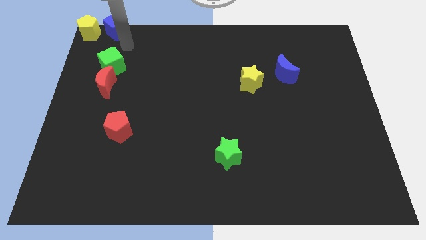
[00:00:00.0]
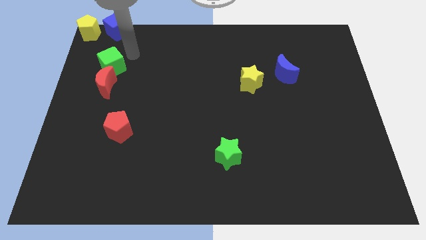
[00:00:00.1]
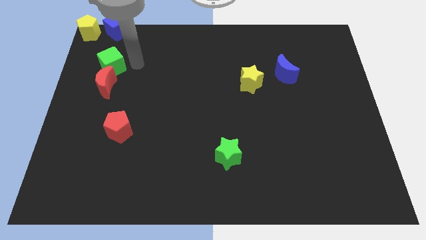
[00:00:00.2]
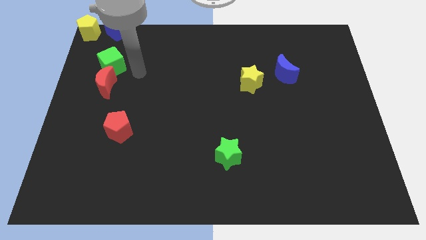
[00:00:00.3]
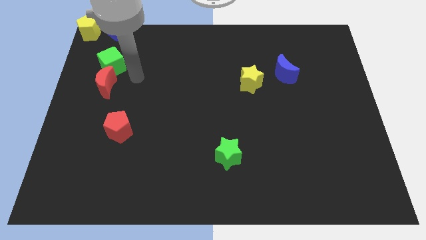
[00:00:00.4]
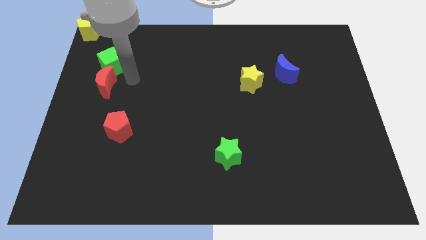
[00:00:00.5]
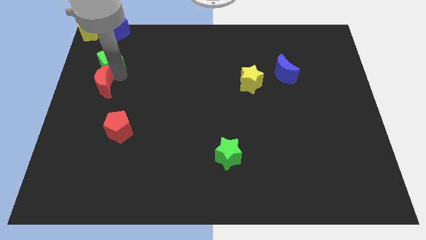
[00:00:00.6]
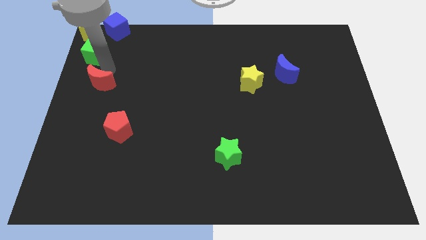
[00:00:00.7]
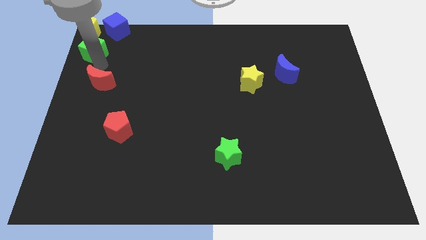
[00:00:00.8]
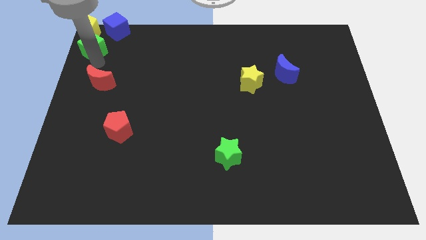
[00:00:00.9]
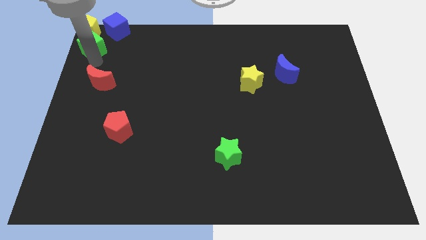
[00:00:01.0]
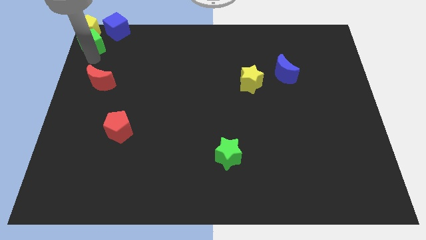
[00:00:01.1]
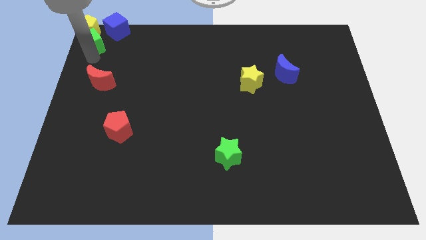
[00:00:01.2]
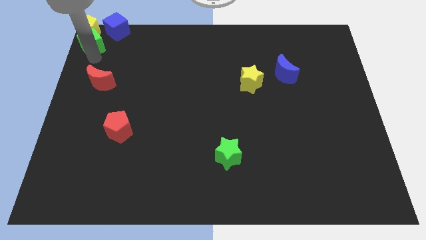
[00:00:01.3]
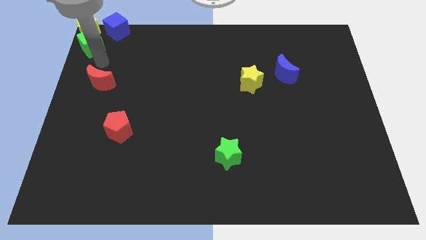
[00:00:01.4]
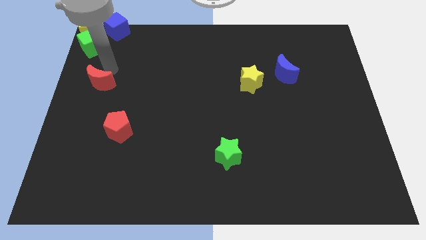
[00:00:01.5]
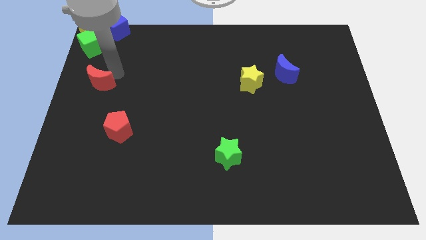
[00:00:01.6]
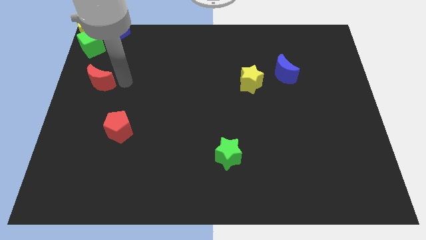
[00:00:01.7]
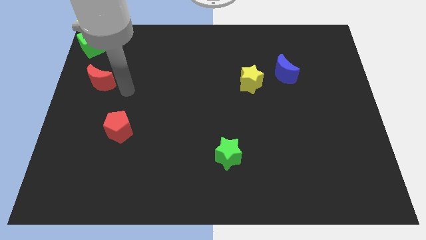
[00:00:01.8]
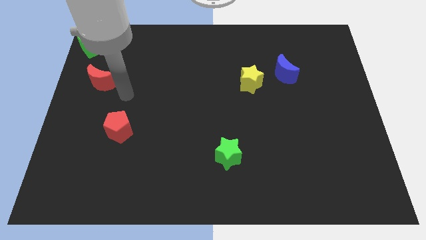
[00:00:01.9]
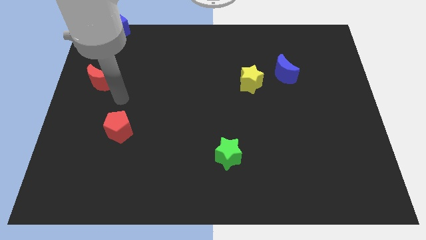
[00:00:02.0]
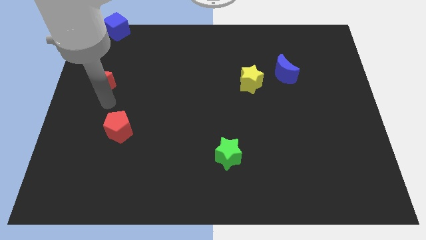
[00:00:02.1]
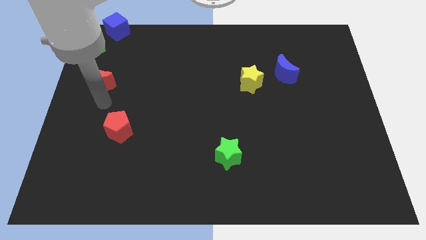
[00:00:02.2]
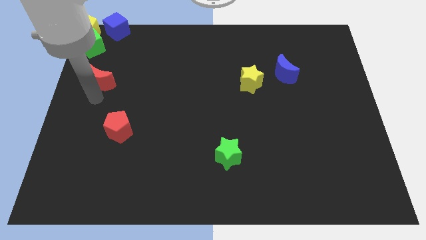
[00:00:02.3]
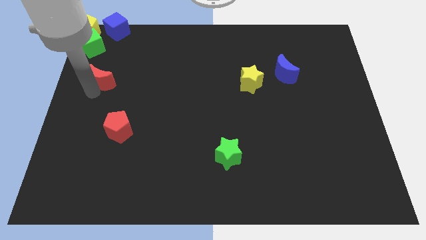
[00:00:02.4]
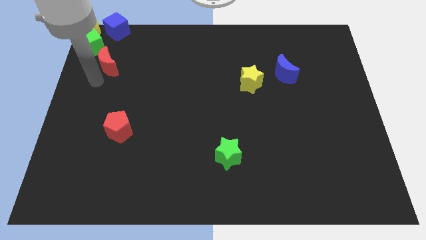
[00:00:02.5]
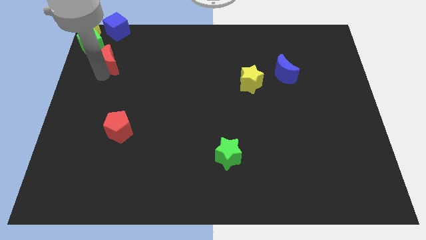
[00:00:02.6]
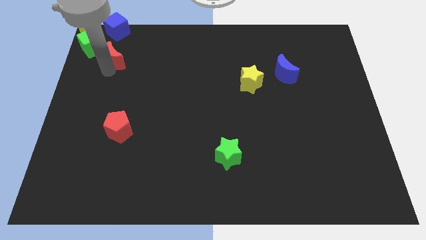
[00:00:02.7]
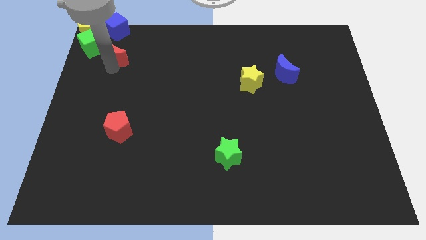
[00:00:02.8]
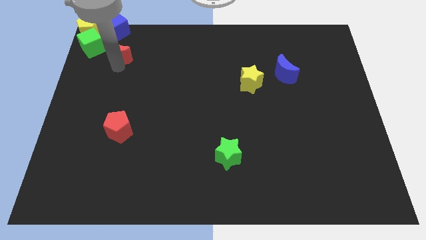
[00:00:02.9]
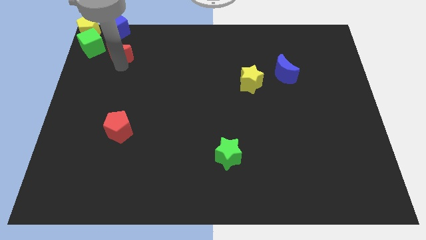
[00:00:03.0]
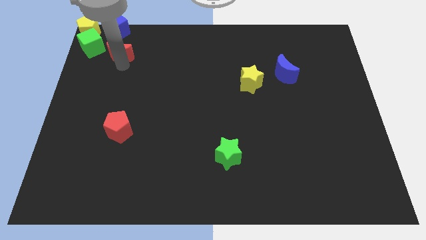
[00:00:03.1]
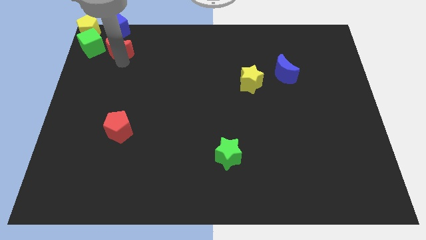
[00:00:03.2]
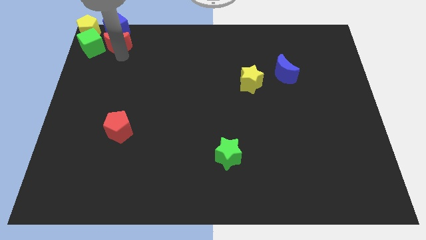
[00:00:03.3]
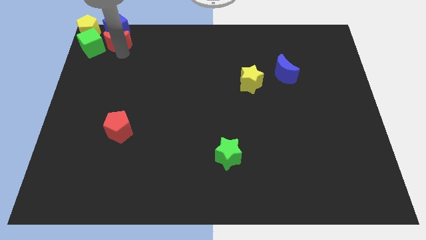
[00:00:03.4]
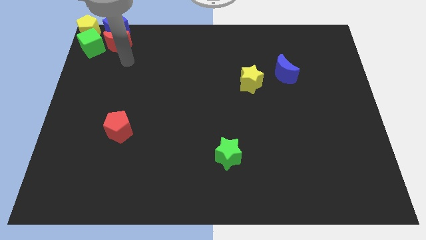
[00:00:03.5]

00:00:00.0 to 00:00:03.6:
push the green cube and red crescent to the top left corner of the board

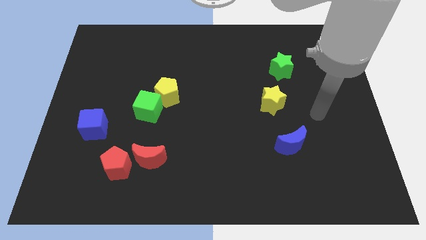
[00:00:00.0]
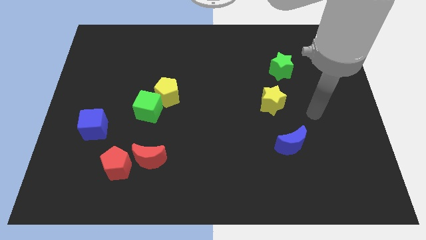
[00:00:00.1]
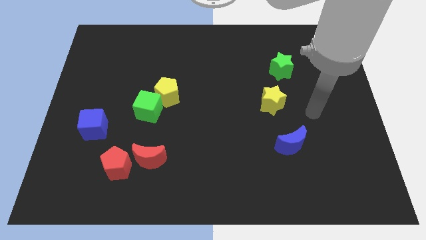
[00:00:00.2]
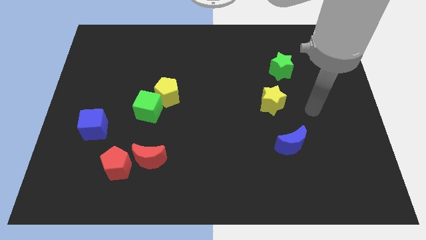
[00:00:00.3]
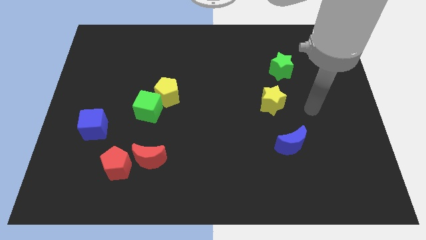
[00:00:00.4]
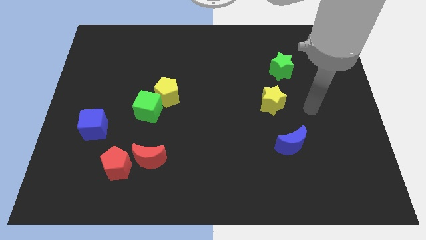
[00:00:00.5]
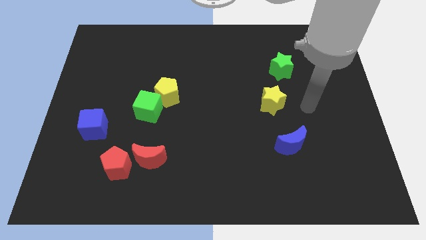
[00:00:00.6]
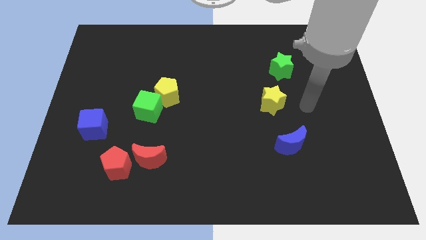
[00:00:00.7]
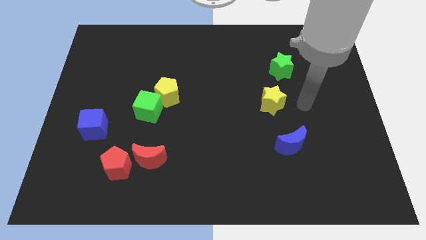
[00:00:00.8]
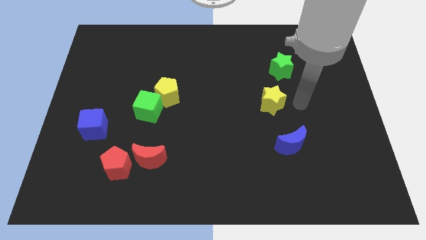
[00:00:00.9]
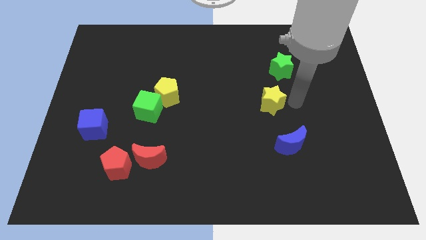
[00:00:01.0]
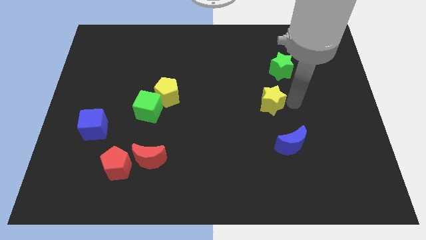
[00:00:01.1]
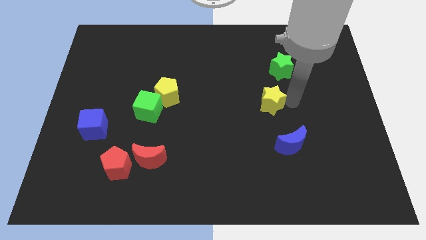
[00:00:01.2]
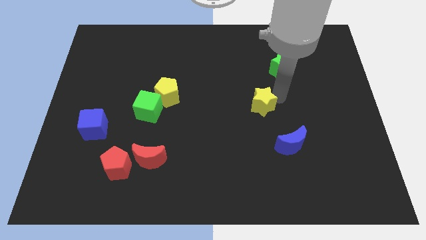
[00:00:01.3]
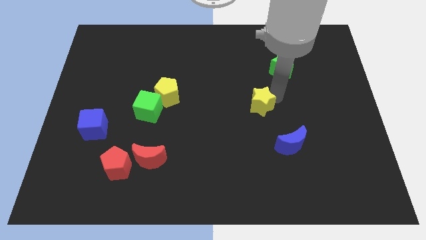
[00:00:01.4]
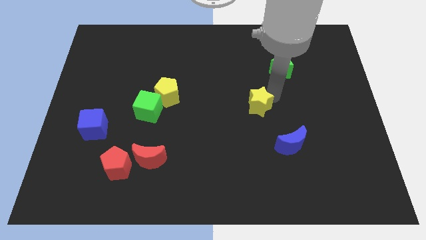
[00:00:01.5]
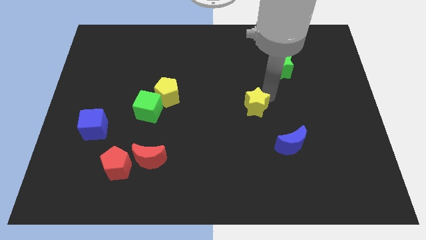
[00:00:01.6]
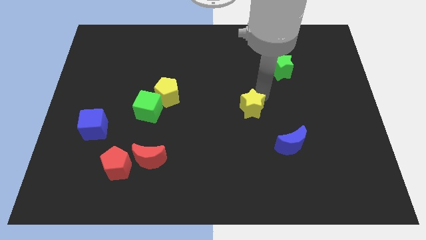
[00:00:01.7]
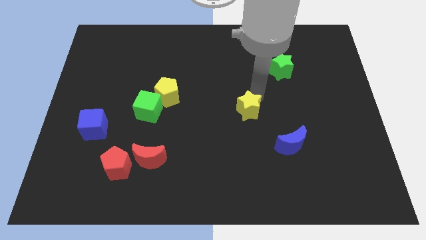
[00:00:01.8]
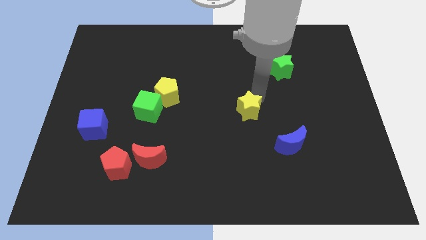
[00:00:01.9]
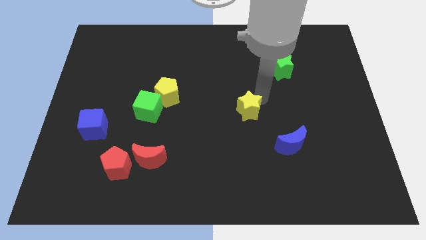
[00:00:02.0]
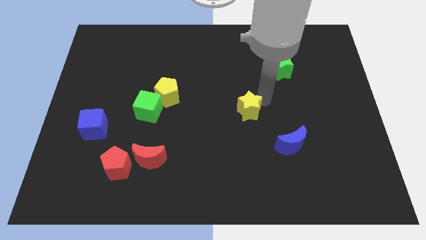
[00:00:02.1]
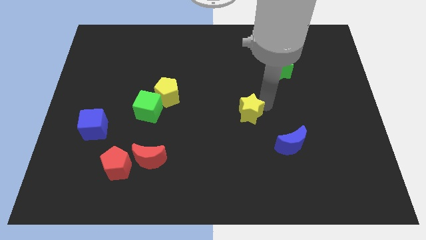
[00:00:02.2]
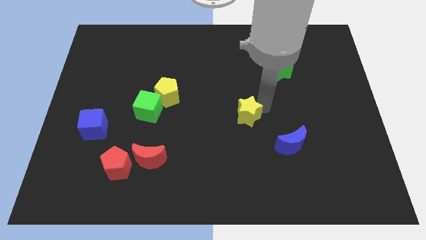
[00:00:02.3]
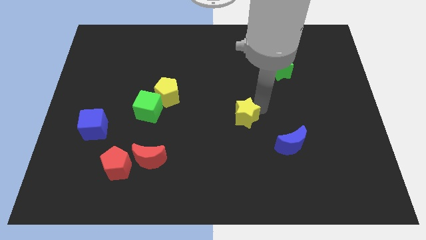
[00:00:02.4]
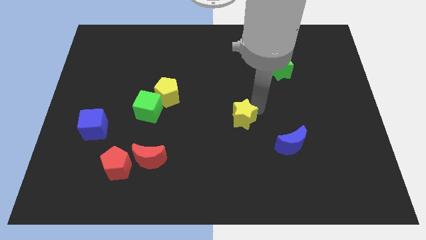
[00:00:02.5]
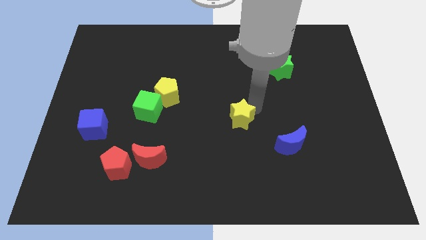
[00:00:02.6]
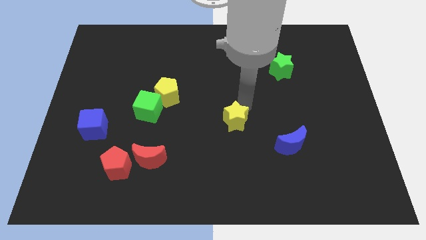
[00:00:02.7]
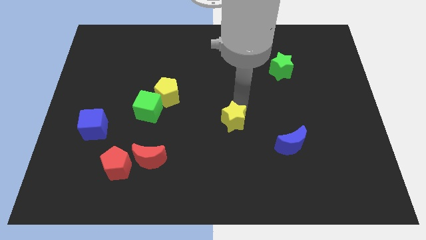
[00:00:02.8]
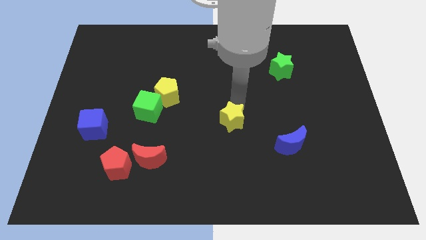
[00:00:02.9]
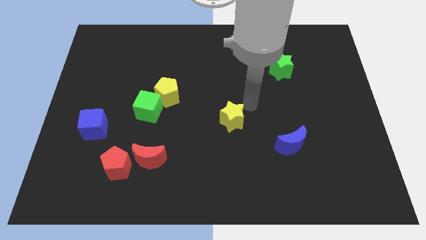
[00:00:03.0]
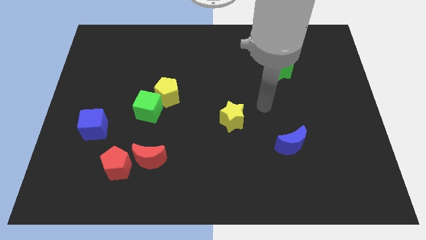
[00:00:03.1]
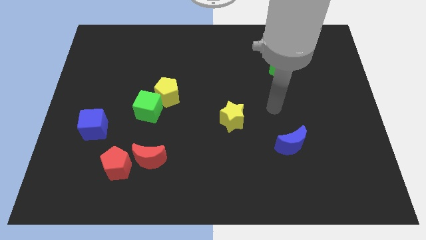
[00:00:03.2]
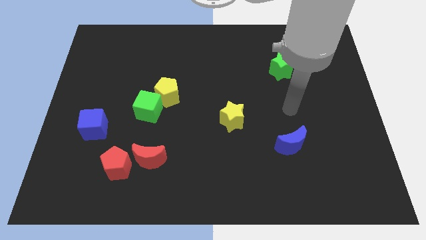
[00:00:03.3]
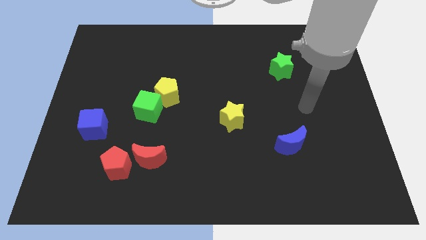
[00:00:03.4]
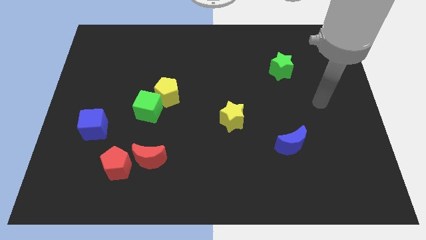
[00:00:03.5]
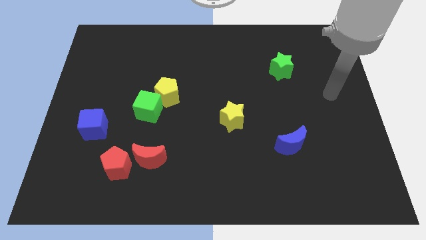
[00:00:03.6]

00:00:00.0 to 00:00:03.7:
push the yellow star towards the center of the board

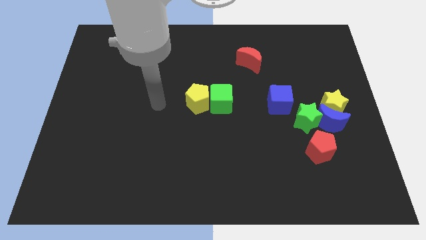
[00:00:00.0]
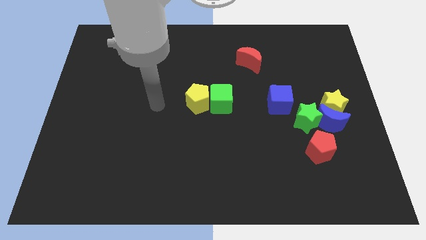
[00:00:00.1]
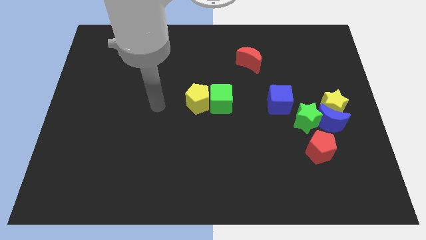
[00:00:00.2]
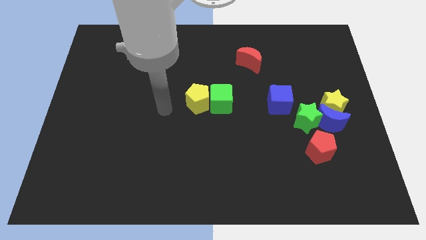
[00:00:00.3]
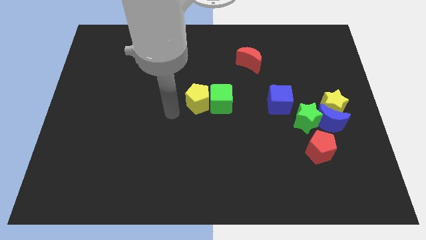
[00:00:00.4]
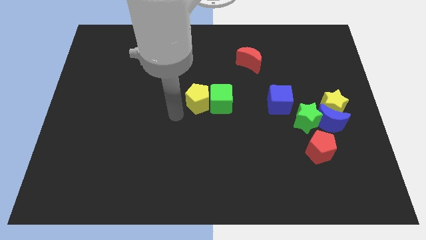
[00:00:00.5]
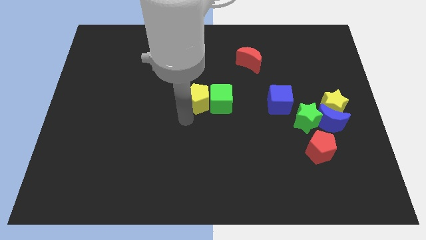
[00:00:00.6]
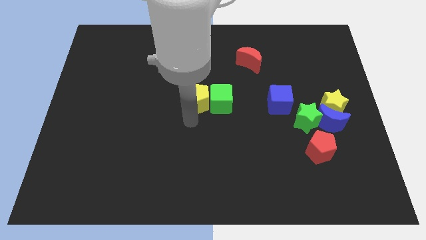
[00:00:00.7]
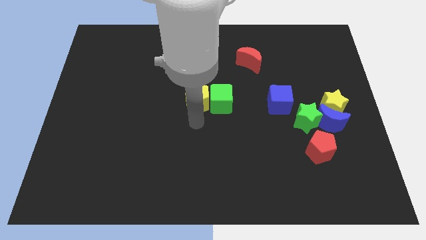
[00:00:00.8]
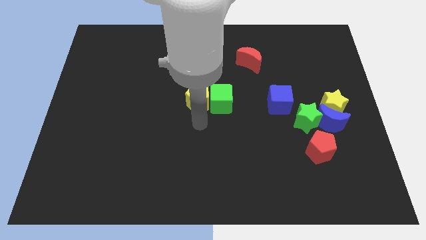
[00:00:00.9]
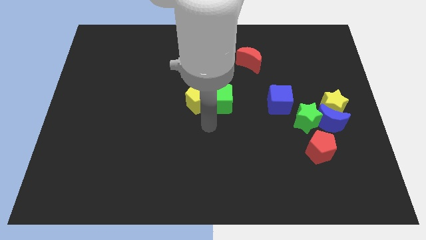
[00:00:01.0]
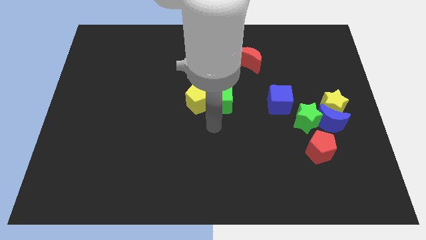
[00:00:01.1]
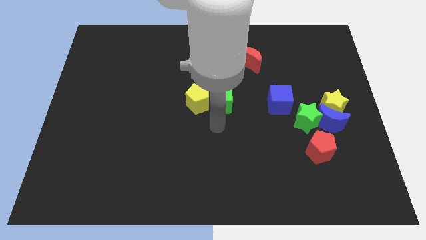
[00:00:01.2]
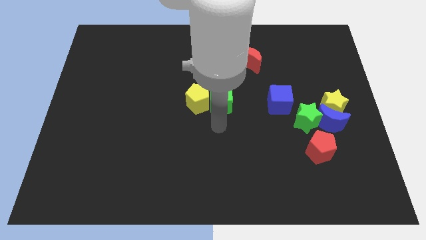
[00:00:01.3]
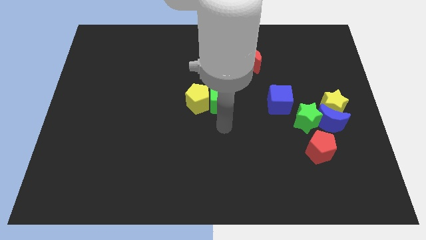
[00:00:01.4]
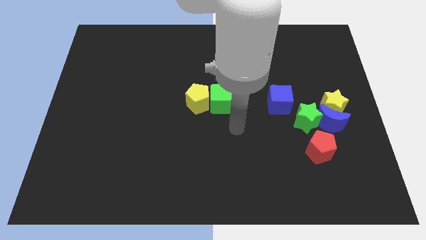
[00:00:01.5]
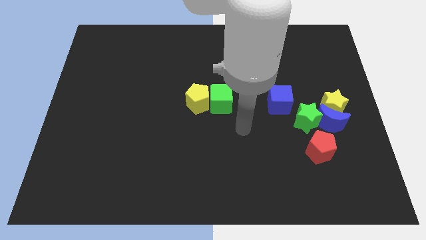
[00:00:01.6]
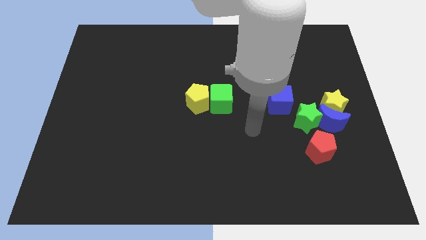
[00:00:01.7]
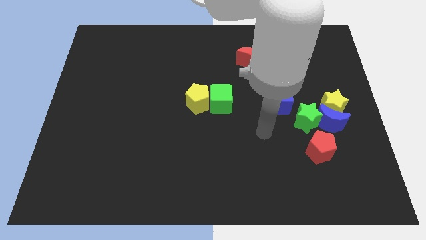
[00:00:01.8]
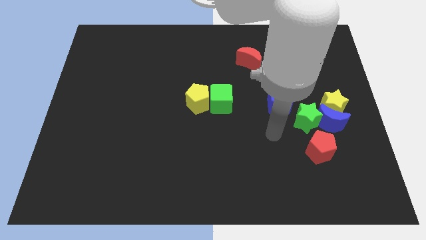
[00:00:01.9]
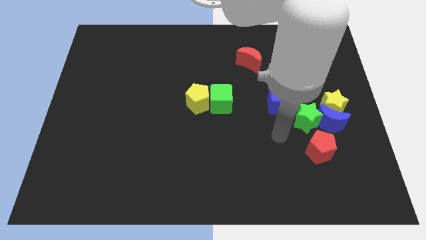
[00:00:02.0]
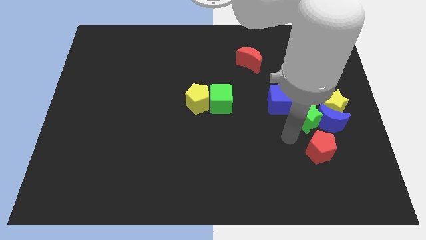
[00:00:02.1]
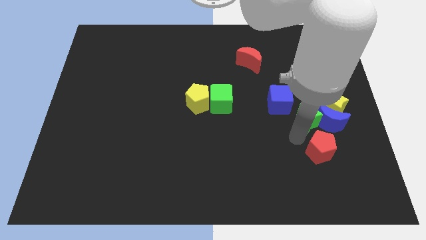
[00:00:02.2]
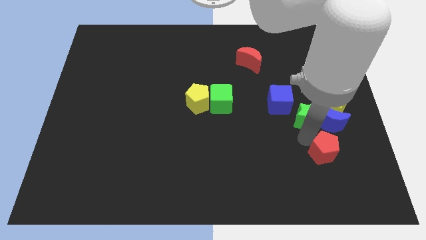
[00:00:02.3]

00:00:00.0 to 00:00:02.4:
move your arm close to the red pentagon
